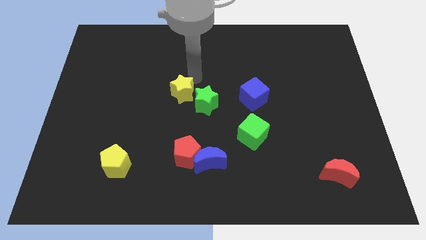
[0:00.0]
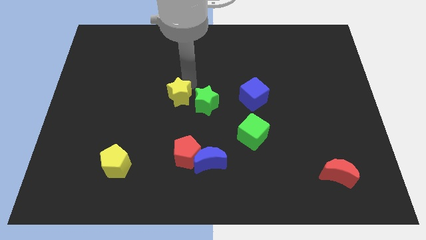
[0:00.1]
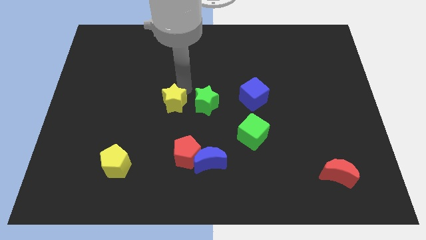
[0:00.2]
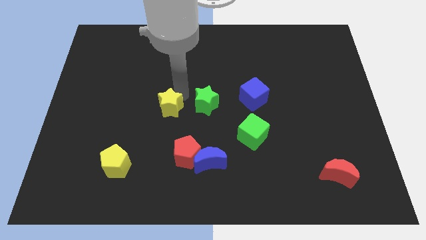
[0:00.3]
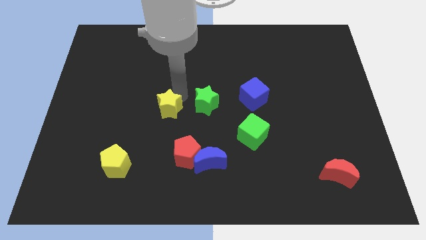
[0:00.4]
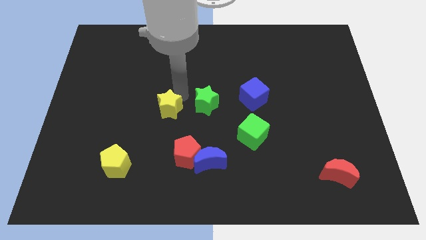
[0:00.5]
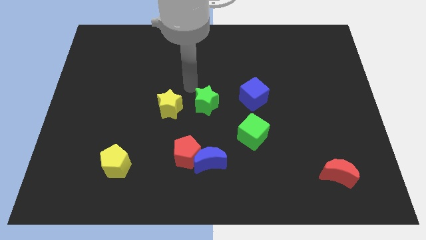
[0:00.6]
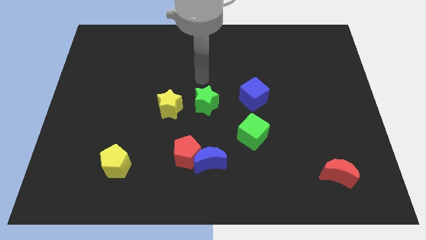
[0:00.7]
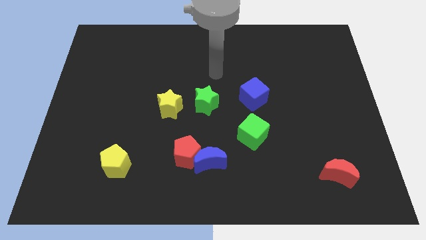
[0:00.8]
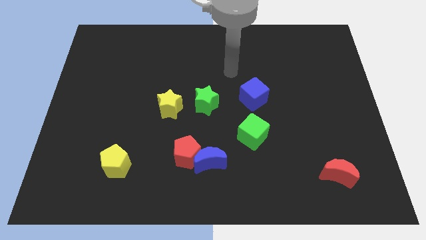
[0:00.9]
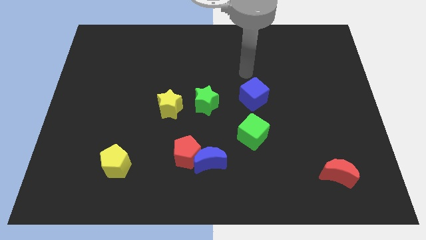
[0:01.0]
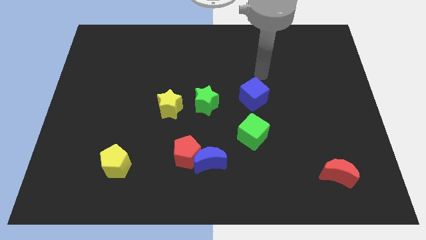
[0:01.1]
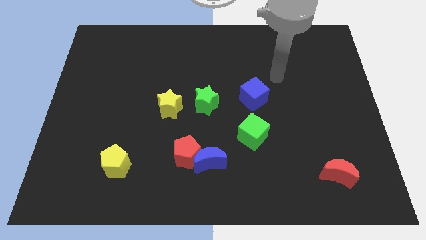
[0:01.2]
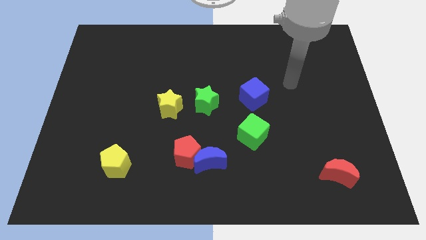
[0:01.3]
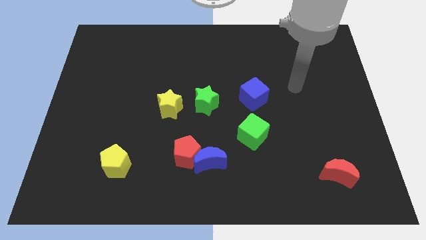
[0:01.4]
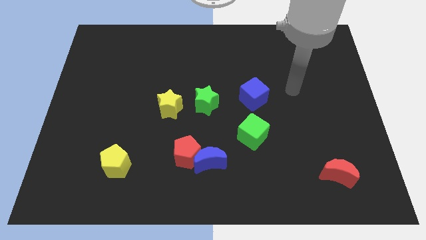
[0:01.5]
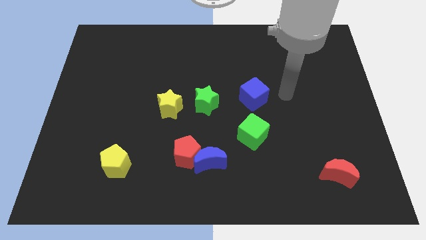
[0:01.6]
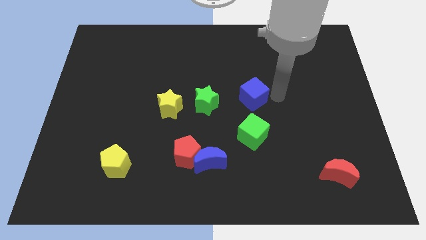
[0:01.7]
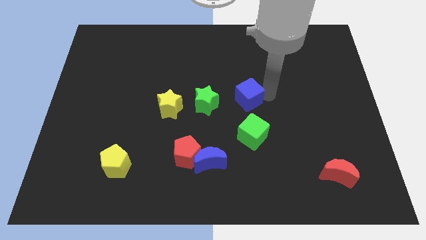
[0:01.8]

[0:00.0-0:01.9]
push the yellow star to the left of the green star

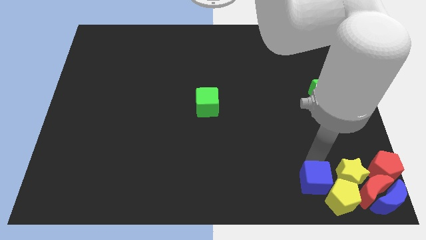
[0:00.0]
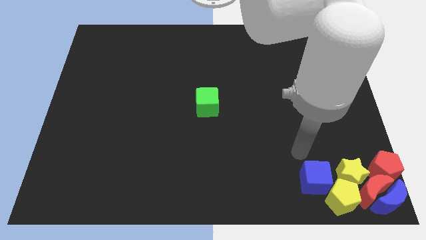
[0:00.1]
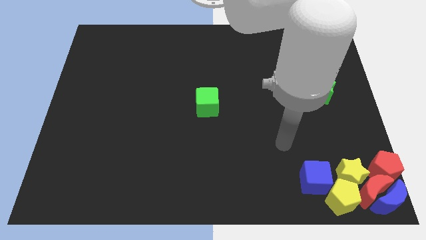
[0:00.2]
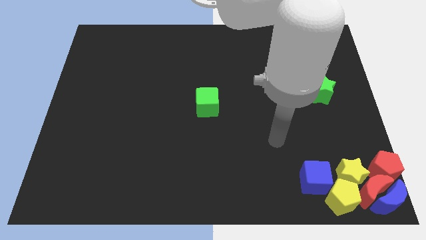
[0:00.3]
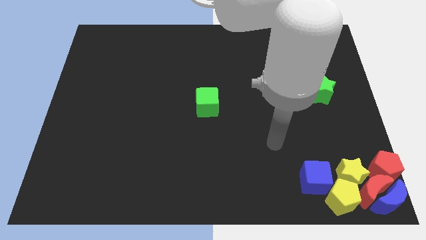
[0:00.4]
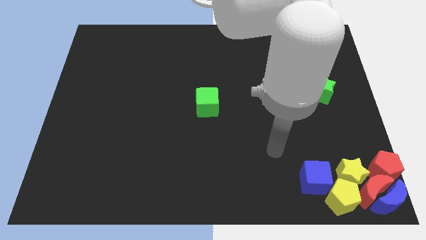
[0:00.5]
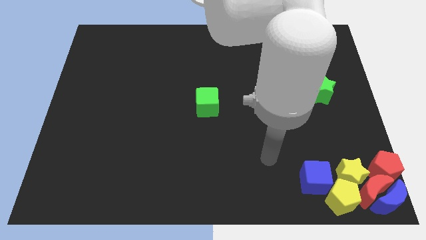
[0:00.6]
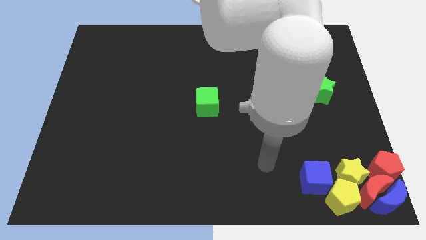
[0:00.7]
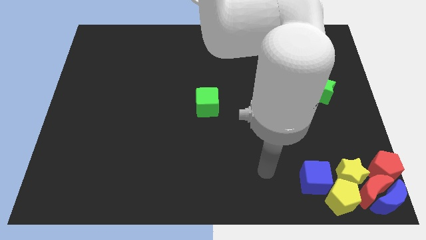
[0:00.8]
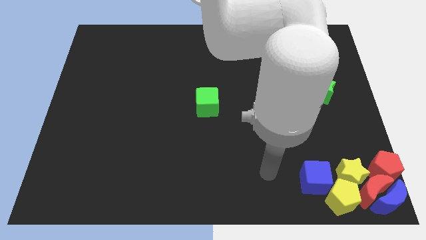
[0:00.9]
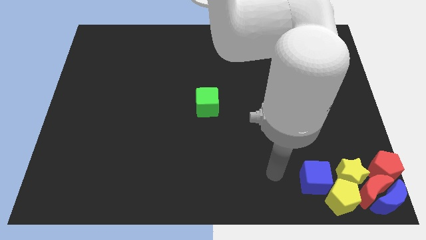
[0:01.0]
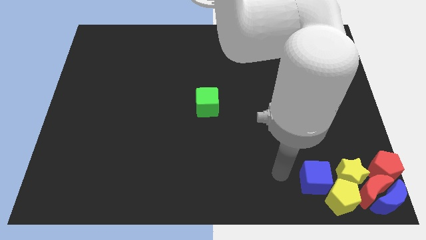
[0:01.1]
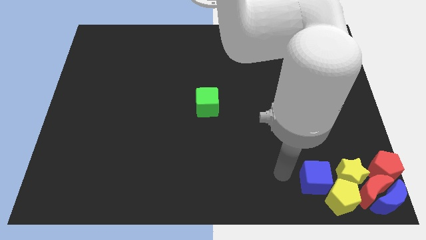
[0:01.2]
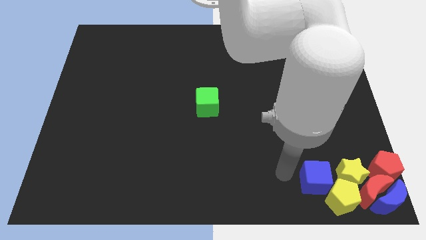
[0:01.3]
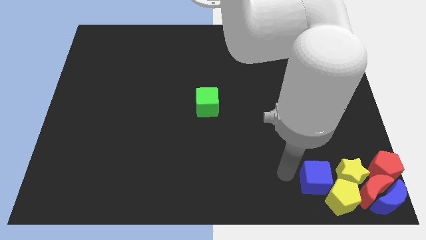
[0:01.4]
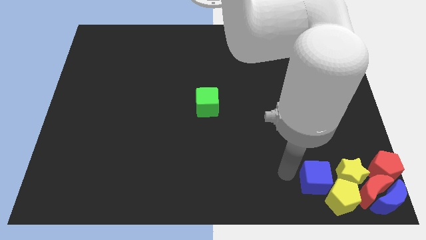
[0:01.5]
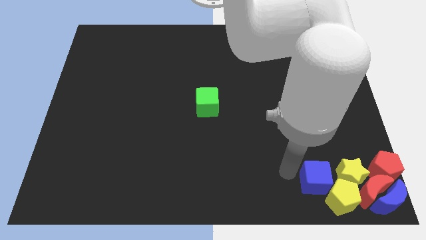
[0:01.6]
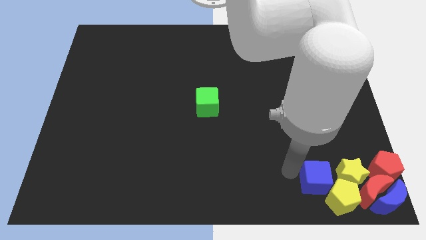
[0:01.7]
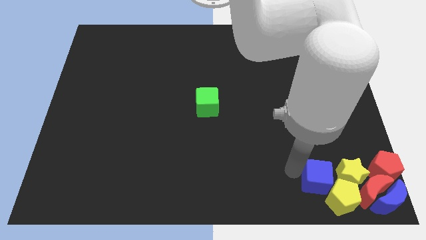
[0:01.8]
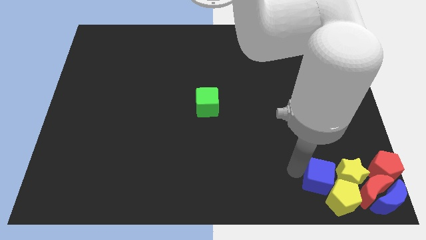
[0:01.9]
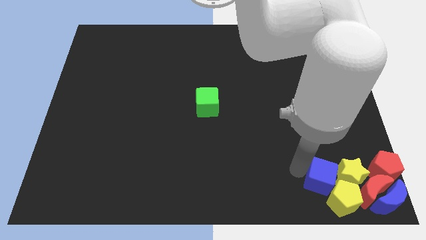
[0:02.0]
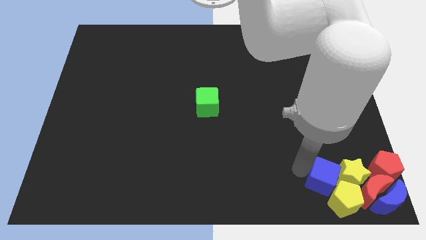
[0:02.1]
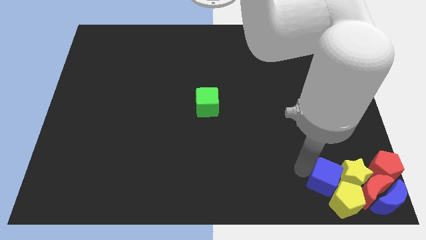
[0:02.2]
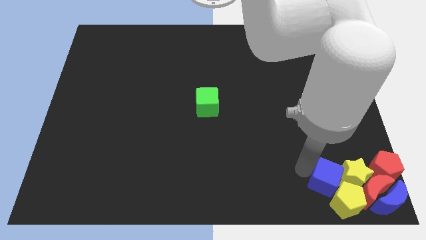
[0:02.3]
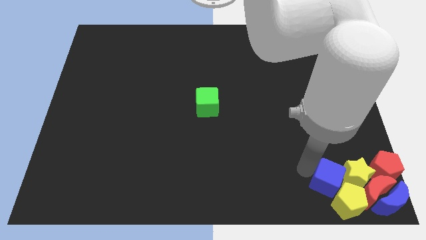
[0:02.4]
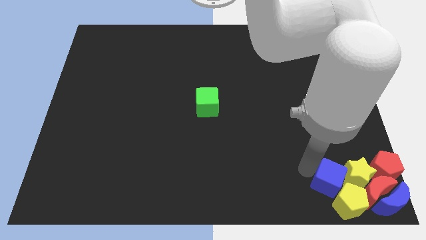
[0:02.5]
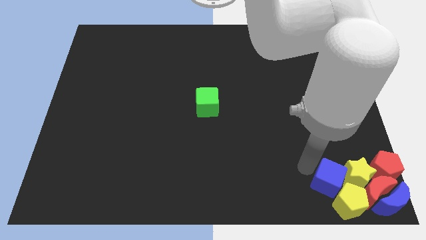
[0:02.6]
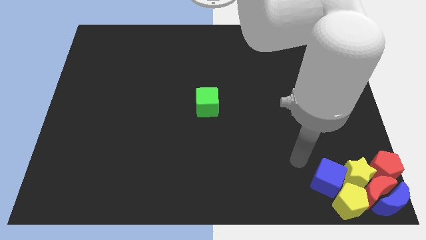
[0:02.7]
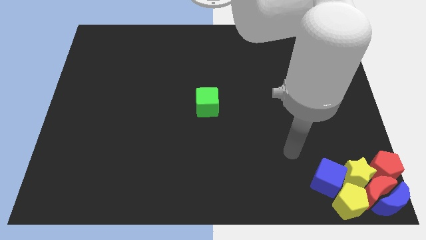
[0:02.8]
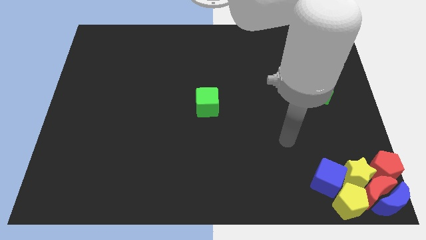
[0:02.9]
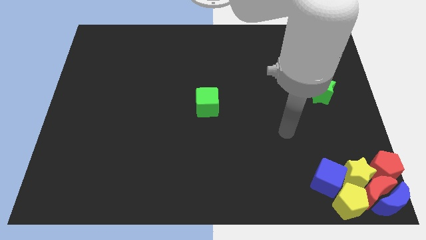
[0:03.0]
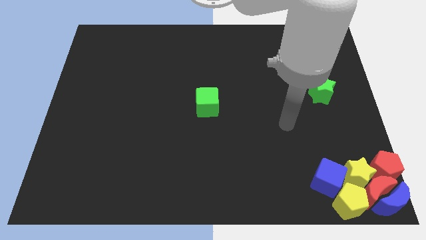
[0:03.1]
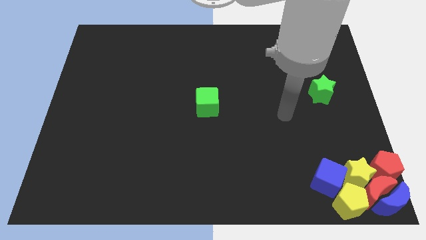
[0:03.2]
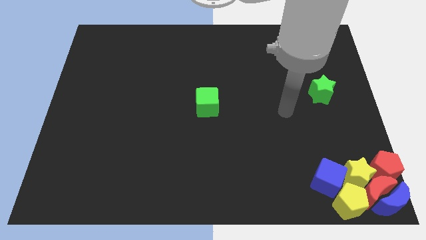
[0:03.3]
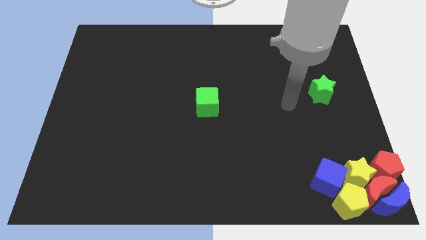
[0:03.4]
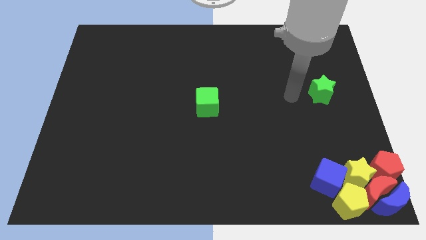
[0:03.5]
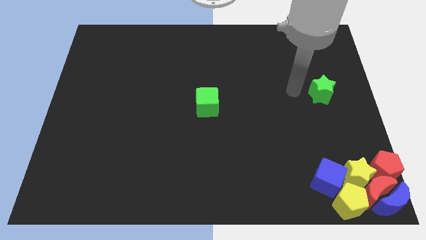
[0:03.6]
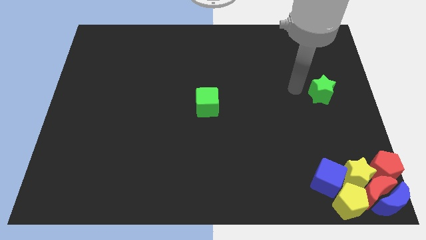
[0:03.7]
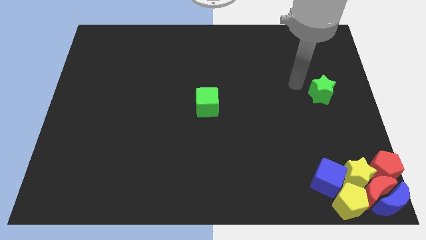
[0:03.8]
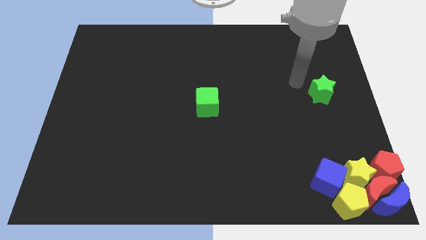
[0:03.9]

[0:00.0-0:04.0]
push the blue cube into the yellow star

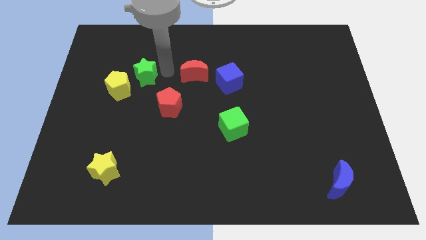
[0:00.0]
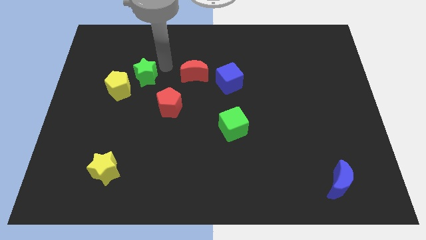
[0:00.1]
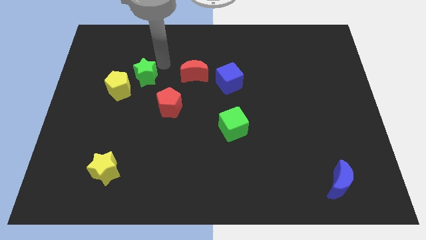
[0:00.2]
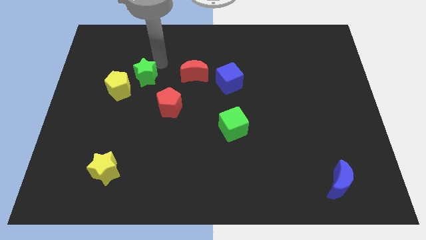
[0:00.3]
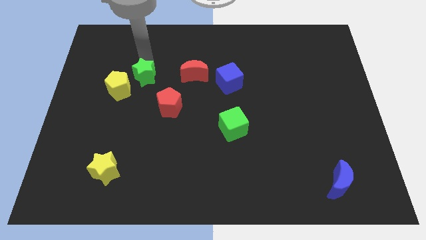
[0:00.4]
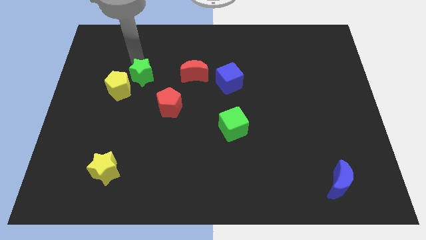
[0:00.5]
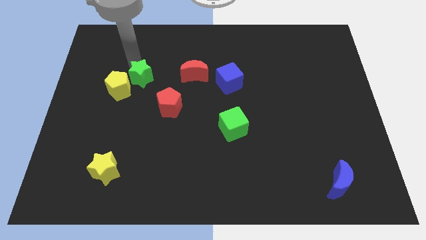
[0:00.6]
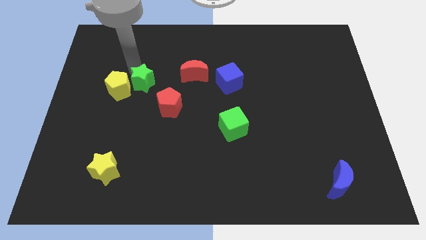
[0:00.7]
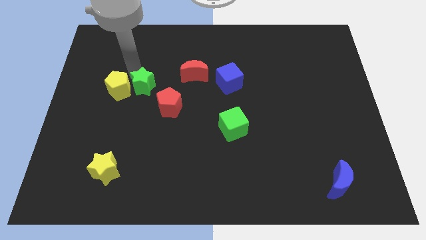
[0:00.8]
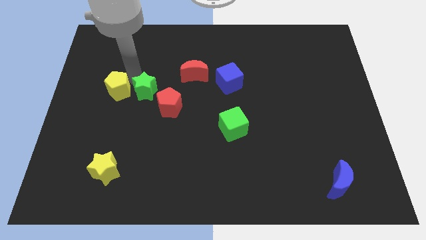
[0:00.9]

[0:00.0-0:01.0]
move the green star to the right of the yellow pentagon

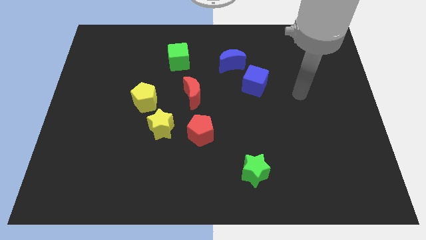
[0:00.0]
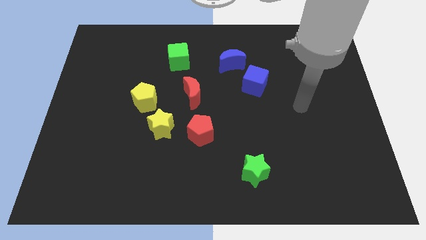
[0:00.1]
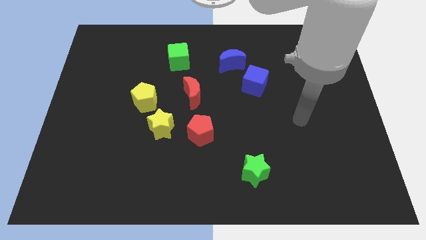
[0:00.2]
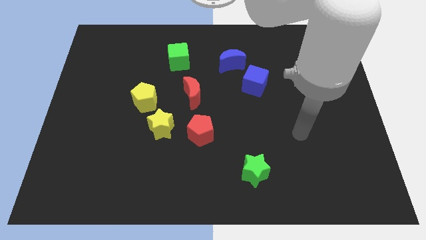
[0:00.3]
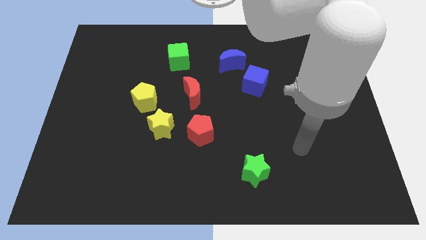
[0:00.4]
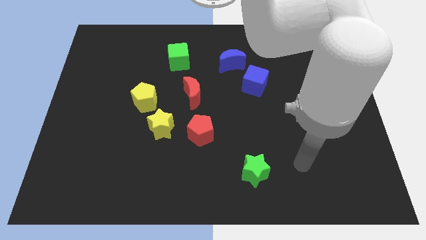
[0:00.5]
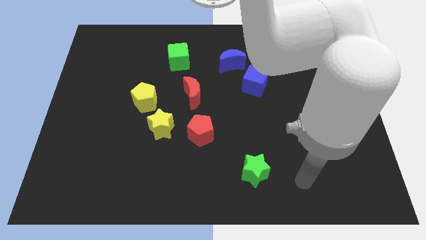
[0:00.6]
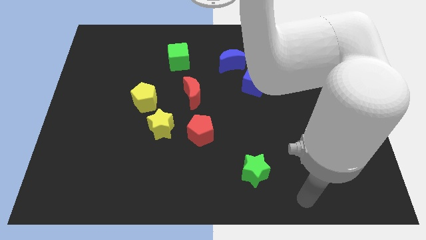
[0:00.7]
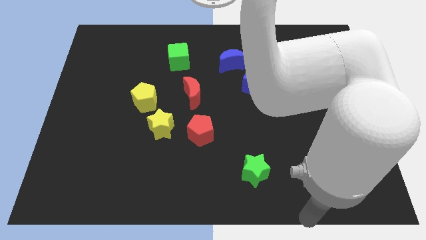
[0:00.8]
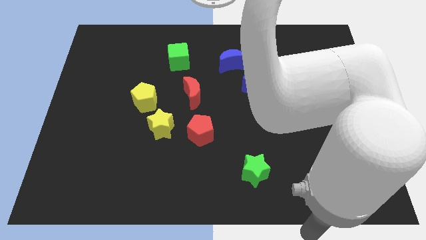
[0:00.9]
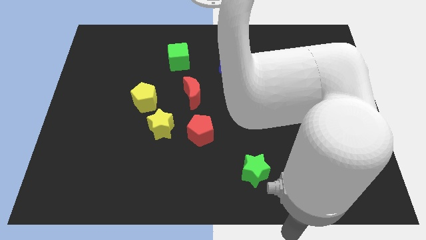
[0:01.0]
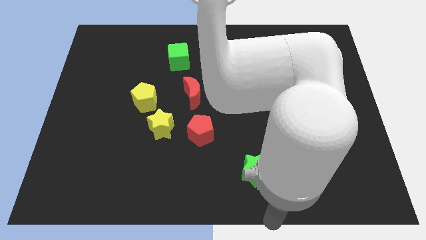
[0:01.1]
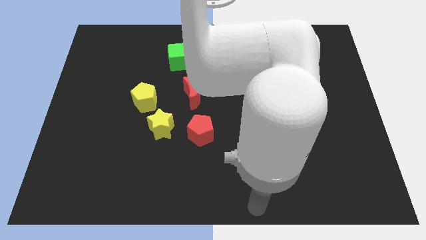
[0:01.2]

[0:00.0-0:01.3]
move your arm below to the green star

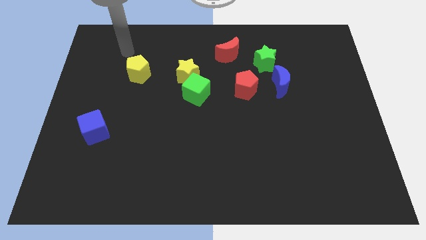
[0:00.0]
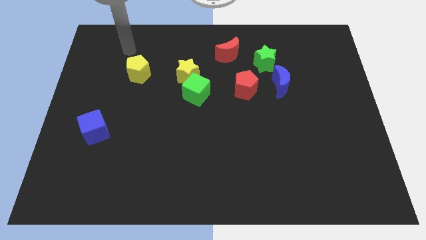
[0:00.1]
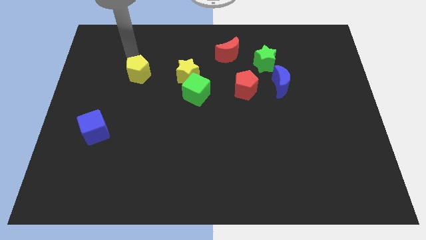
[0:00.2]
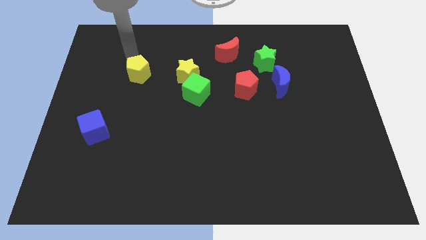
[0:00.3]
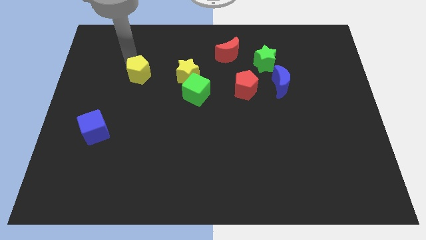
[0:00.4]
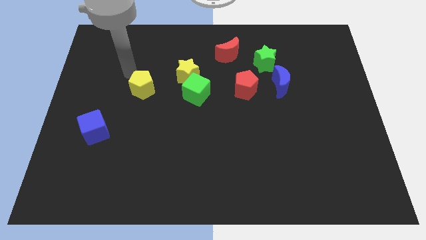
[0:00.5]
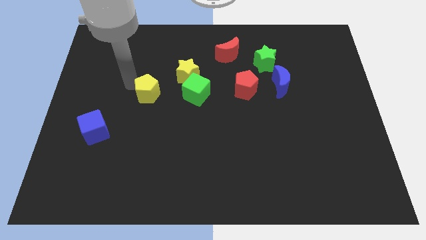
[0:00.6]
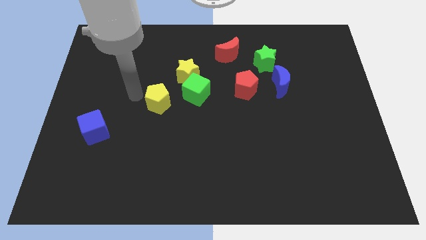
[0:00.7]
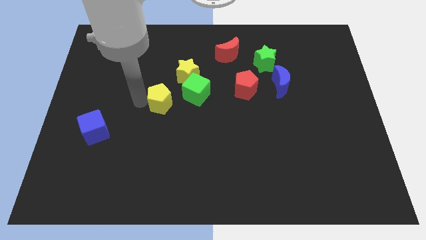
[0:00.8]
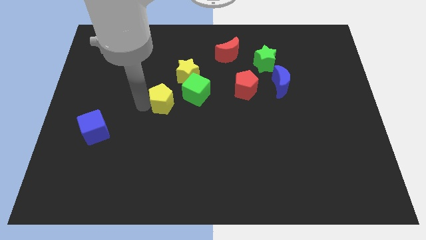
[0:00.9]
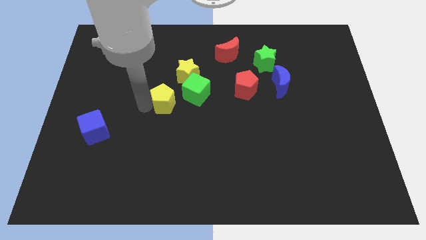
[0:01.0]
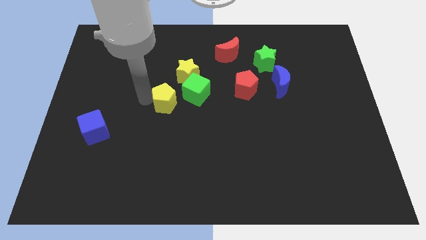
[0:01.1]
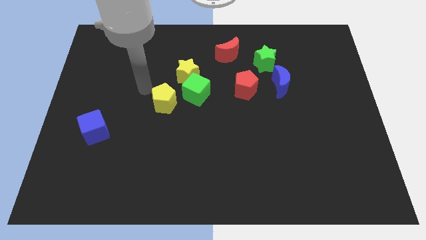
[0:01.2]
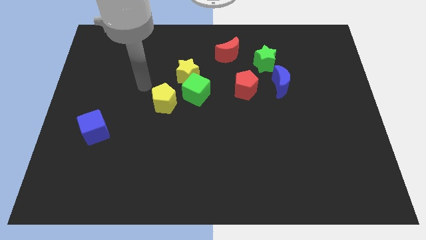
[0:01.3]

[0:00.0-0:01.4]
drag the yellow pentagon close to the green cube
